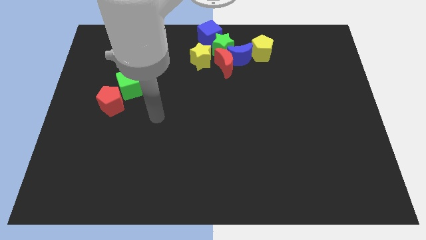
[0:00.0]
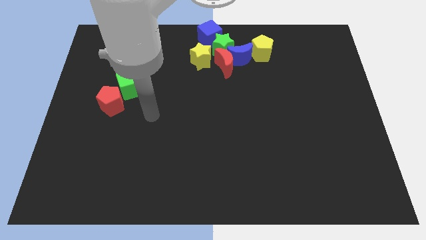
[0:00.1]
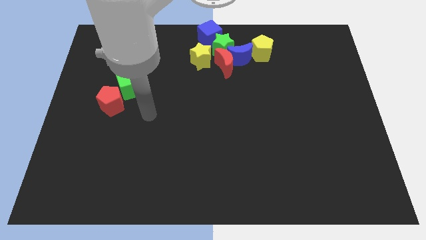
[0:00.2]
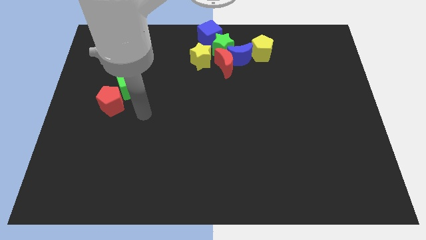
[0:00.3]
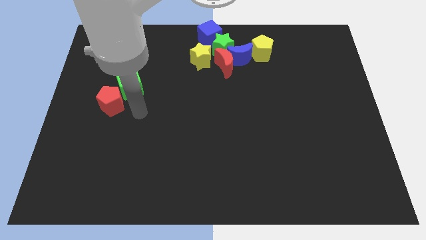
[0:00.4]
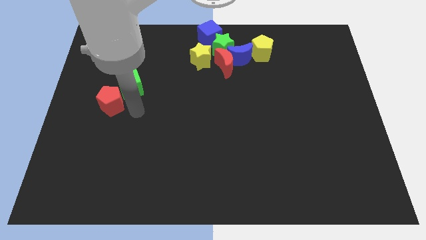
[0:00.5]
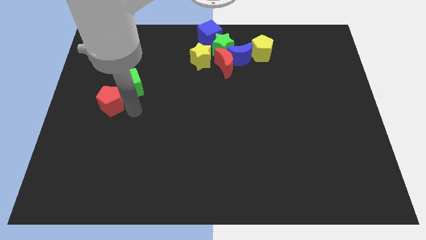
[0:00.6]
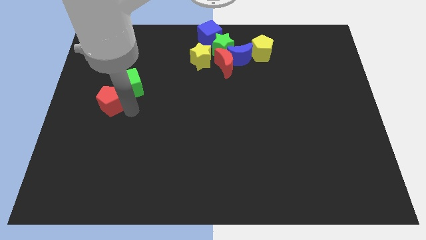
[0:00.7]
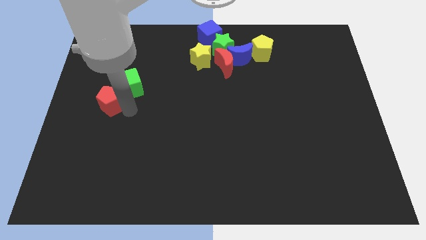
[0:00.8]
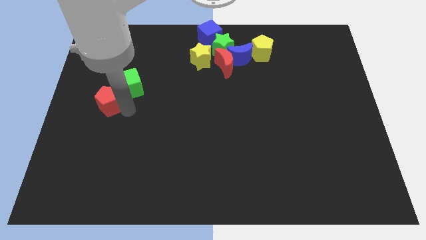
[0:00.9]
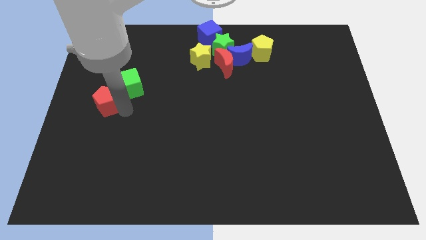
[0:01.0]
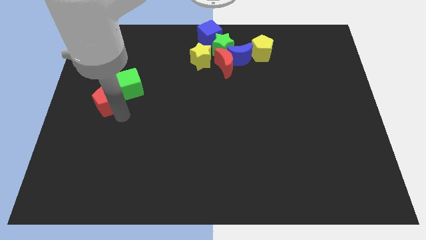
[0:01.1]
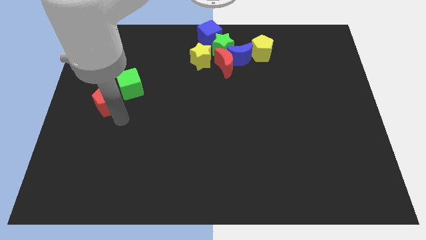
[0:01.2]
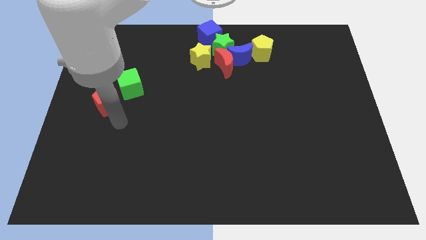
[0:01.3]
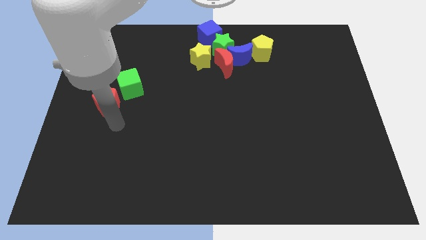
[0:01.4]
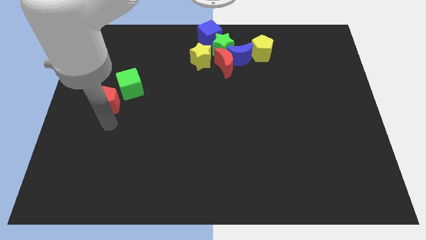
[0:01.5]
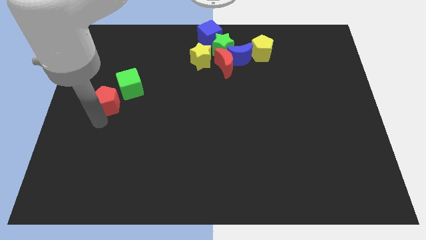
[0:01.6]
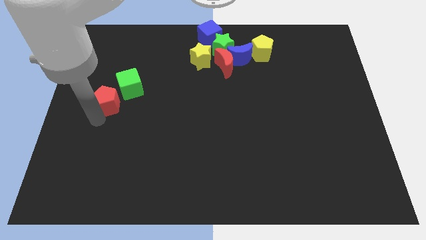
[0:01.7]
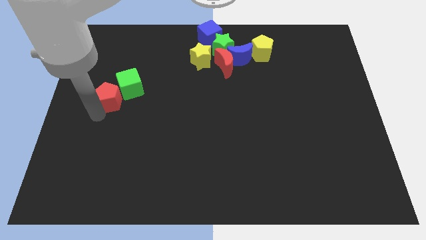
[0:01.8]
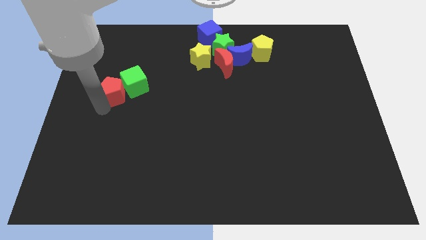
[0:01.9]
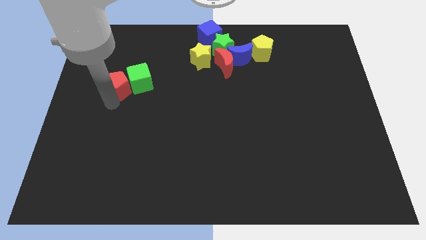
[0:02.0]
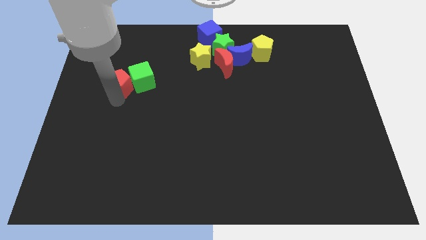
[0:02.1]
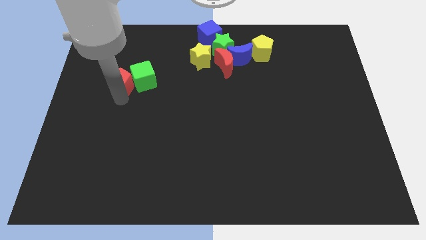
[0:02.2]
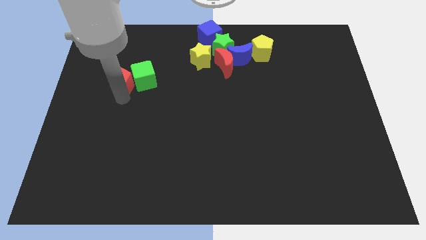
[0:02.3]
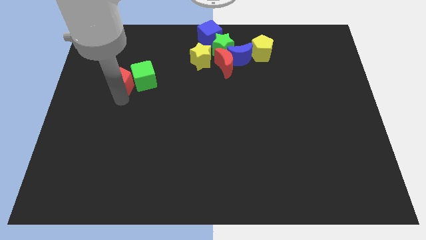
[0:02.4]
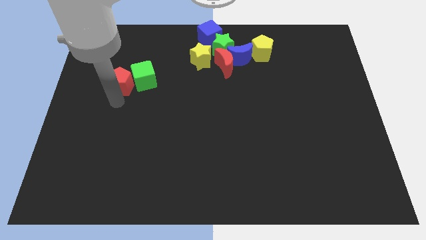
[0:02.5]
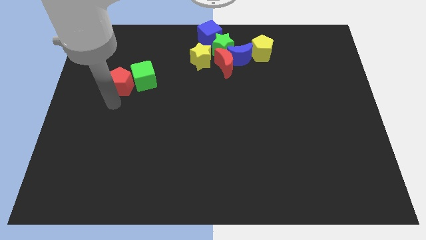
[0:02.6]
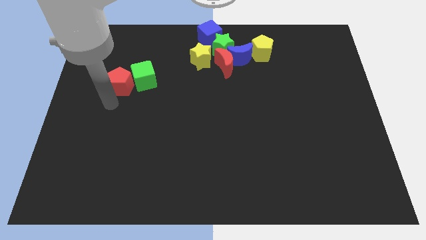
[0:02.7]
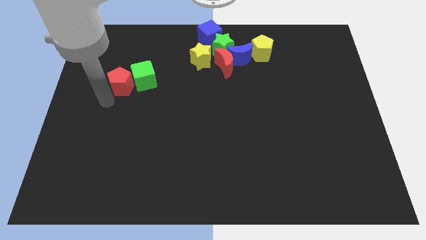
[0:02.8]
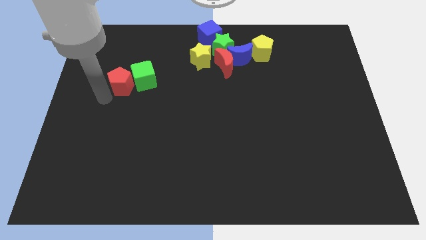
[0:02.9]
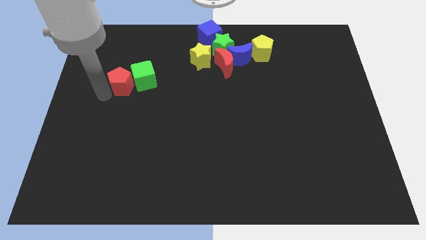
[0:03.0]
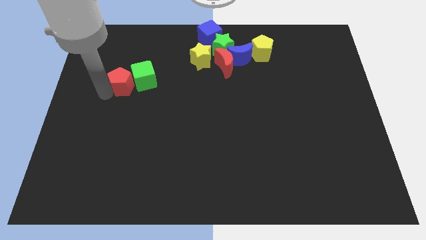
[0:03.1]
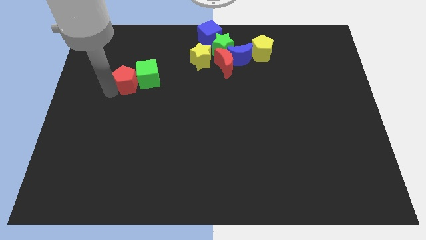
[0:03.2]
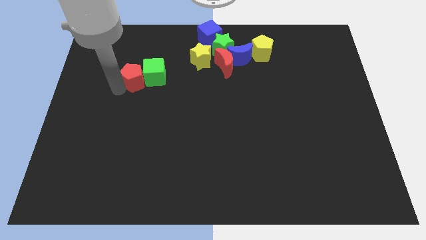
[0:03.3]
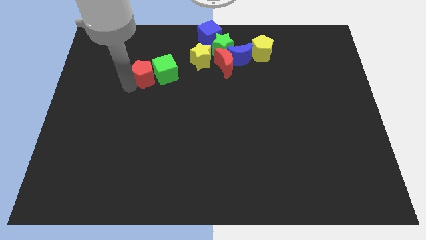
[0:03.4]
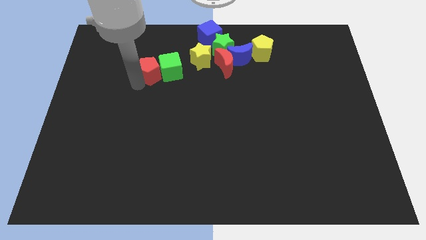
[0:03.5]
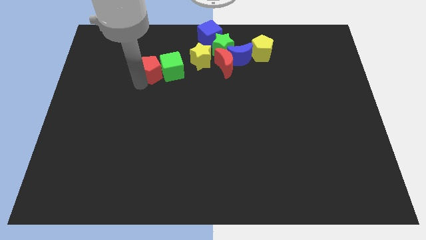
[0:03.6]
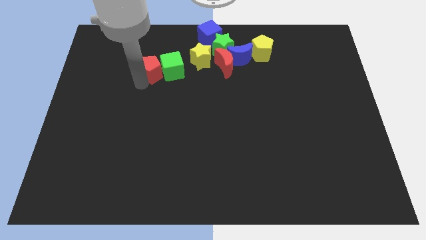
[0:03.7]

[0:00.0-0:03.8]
move green cube and red pentagon towards the top center of the board

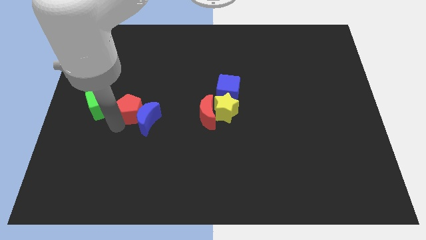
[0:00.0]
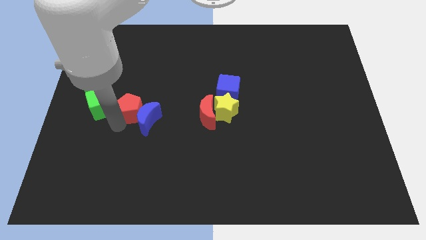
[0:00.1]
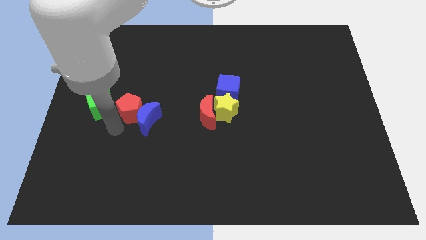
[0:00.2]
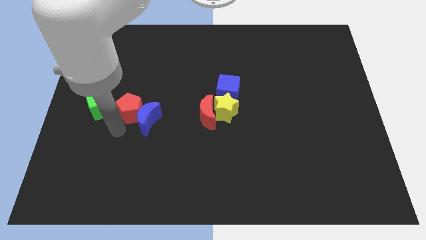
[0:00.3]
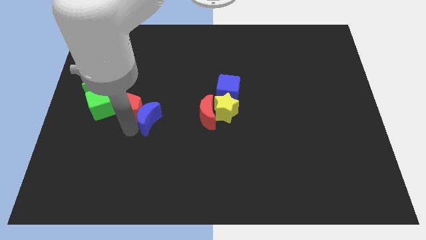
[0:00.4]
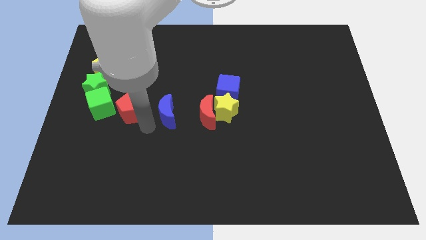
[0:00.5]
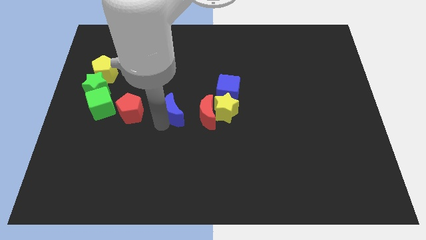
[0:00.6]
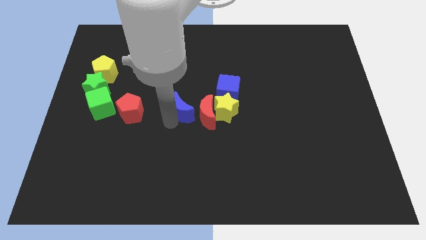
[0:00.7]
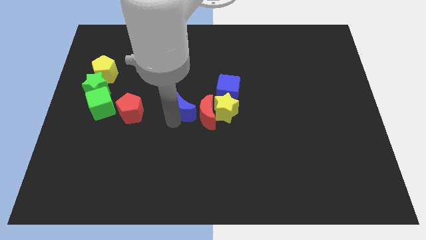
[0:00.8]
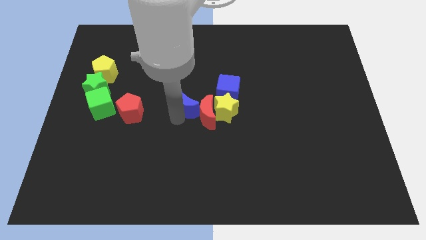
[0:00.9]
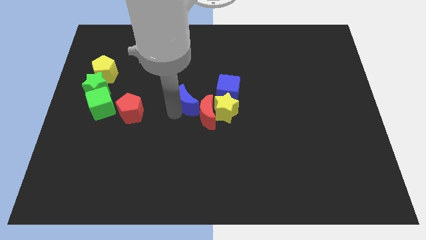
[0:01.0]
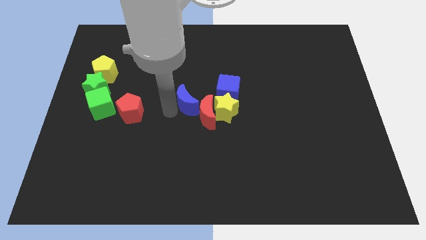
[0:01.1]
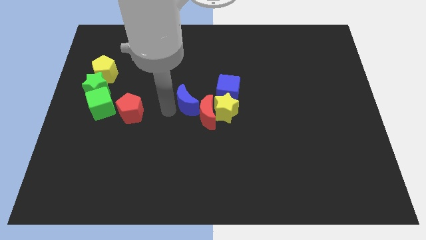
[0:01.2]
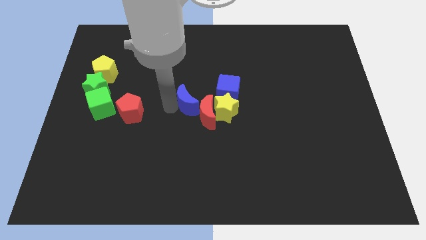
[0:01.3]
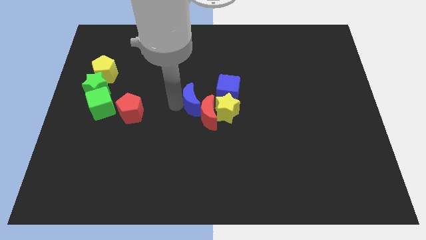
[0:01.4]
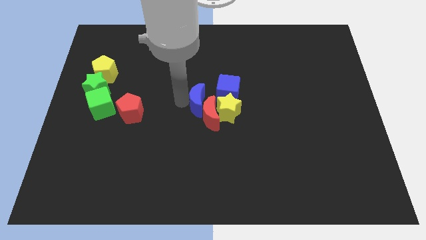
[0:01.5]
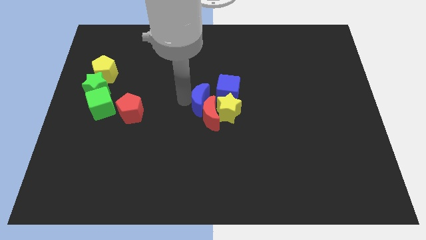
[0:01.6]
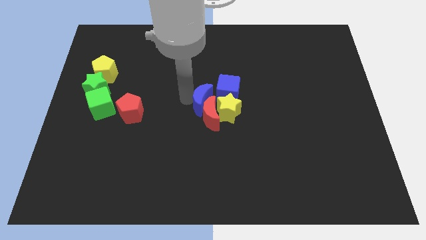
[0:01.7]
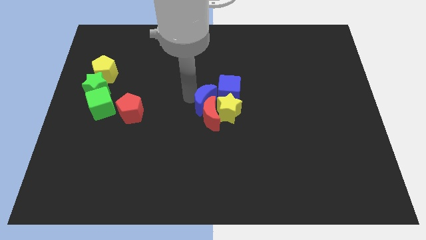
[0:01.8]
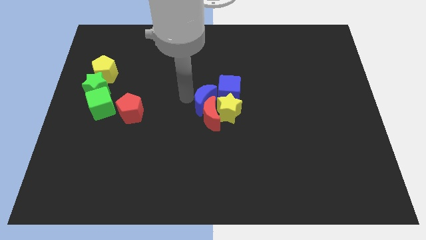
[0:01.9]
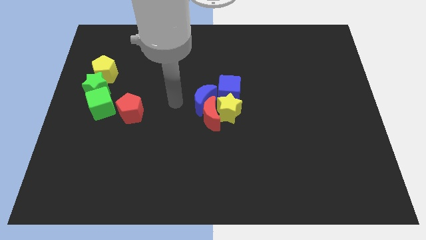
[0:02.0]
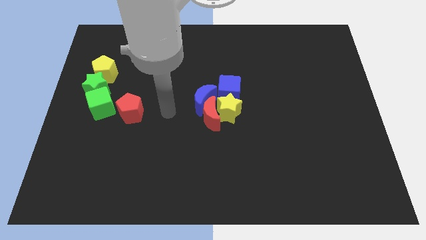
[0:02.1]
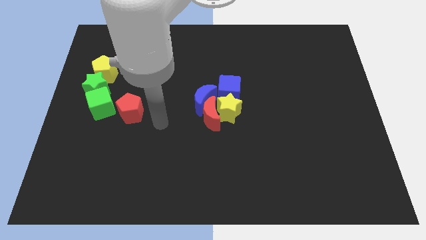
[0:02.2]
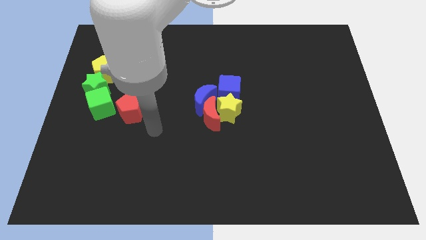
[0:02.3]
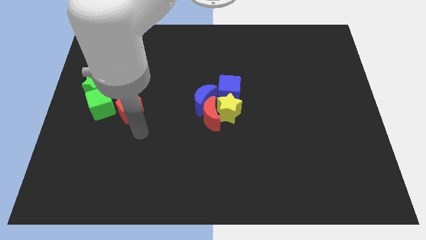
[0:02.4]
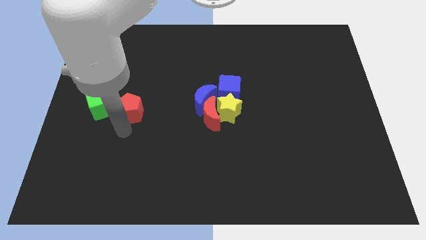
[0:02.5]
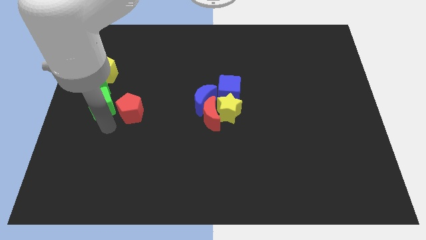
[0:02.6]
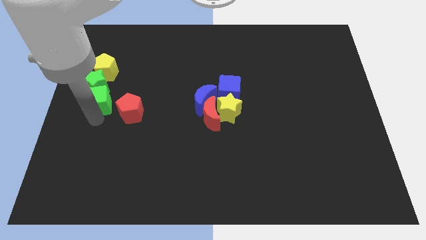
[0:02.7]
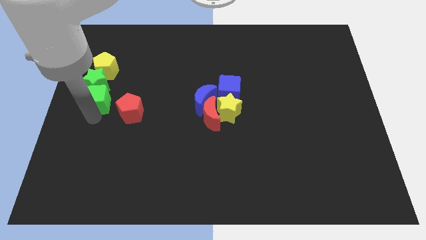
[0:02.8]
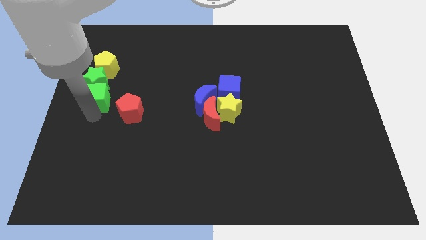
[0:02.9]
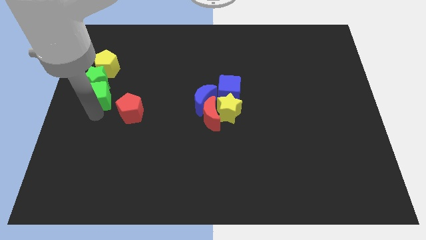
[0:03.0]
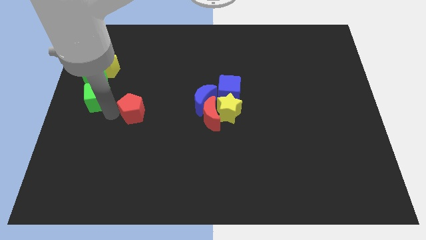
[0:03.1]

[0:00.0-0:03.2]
push the blue moon into the group of blocks at the center

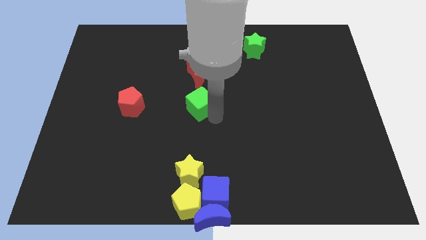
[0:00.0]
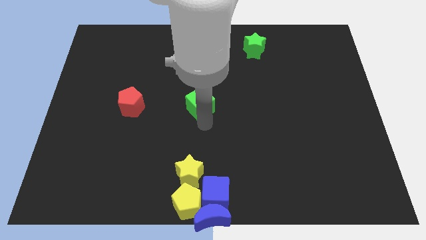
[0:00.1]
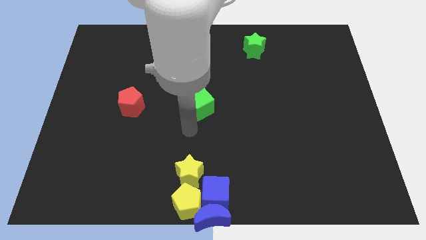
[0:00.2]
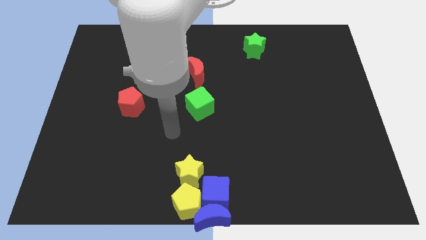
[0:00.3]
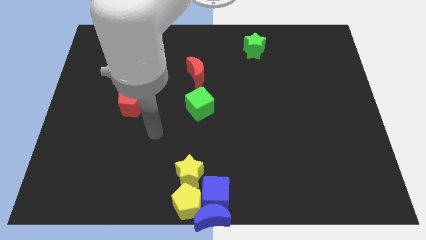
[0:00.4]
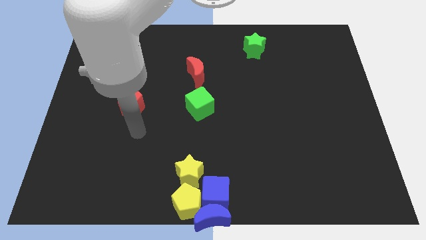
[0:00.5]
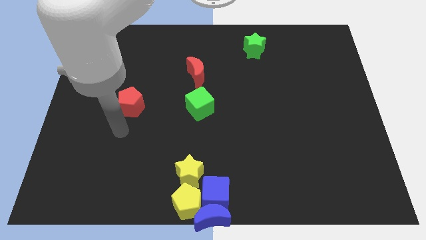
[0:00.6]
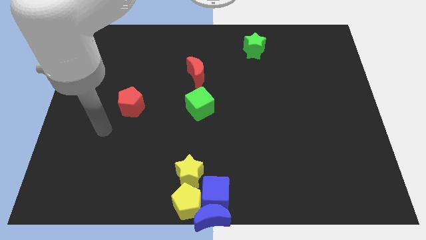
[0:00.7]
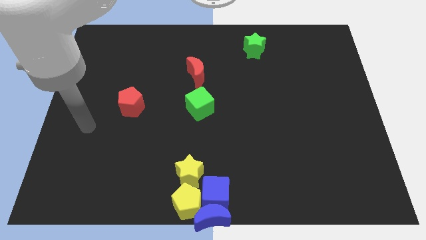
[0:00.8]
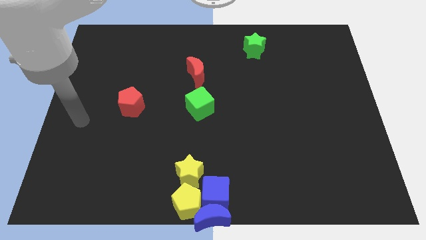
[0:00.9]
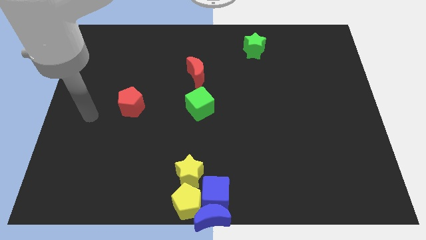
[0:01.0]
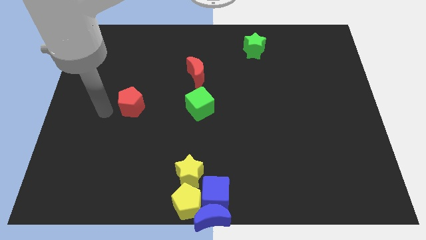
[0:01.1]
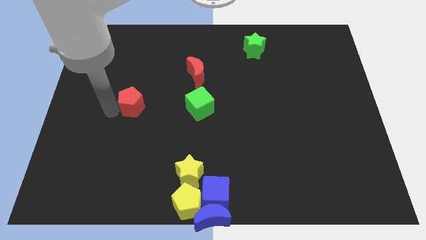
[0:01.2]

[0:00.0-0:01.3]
move your arm left to the red pentagon

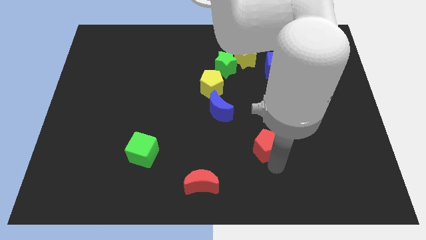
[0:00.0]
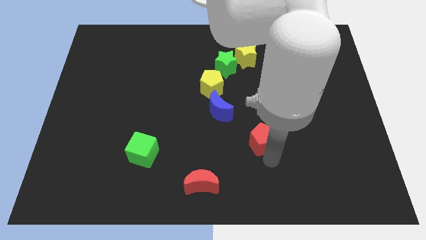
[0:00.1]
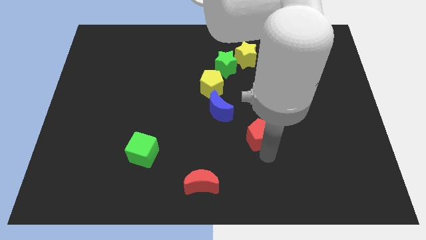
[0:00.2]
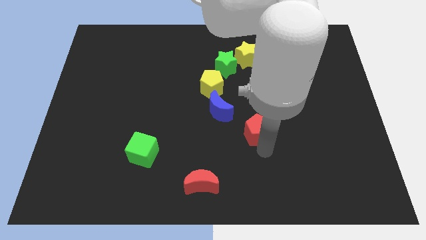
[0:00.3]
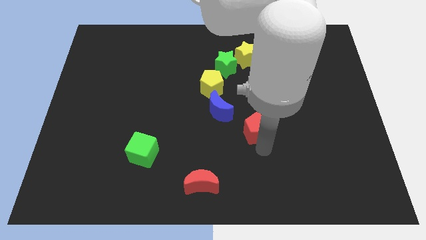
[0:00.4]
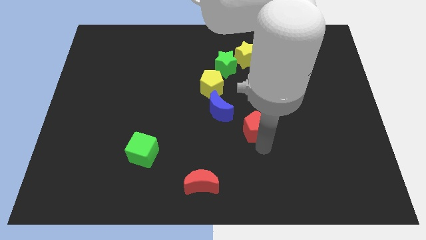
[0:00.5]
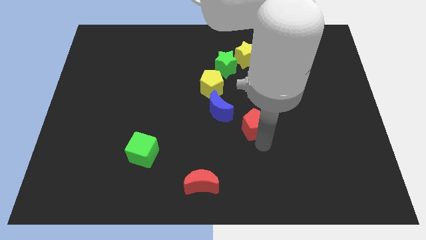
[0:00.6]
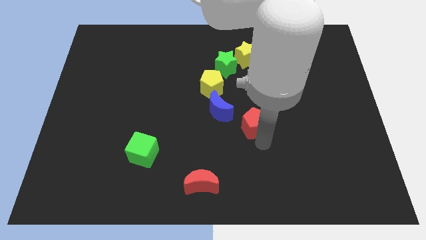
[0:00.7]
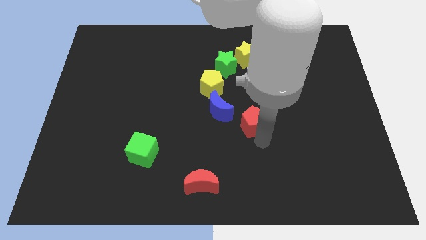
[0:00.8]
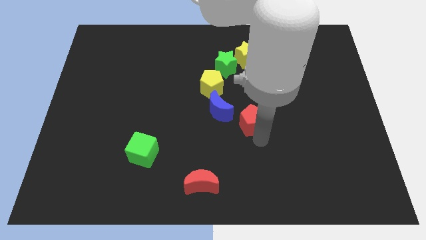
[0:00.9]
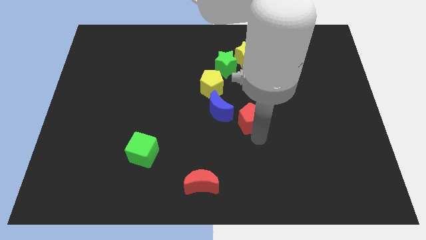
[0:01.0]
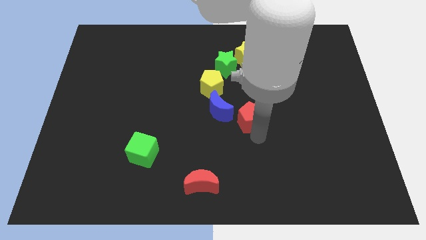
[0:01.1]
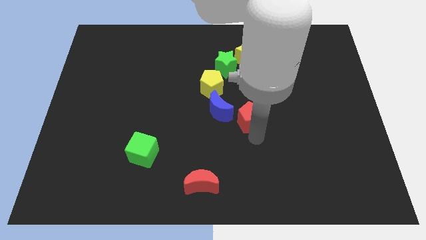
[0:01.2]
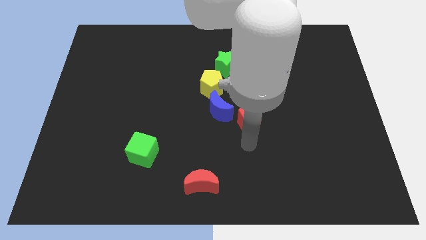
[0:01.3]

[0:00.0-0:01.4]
place the red pentagon to the right side of the blue moon
